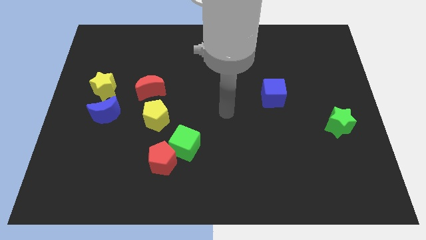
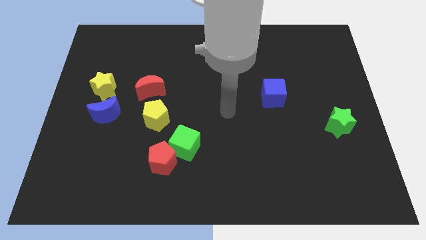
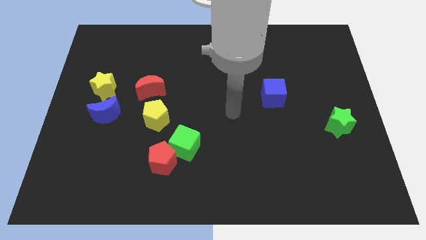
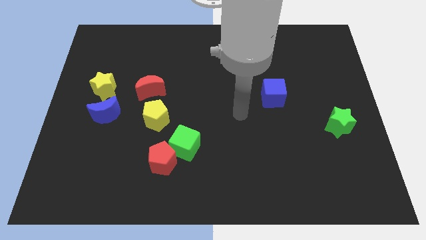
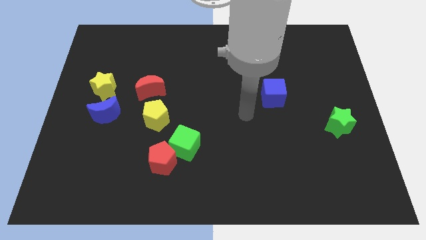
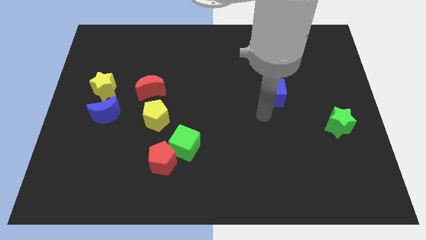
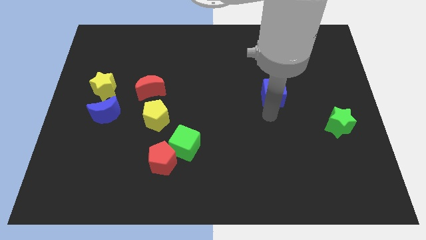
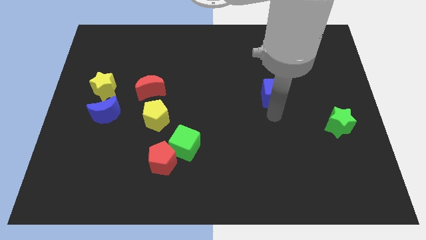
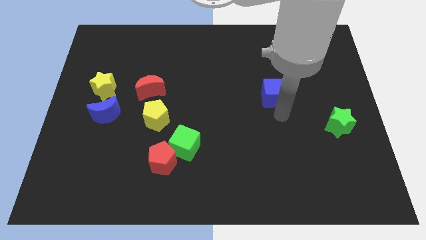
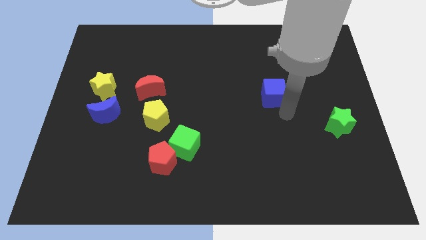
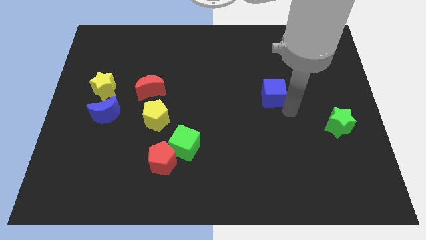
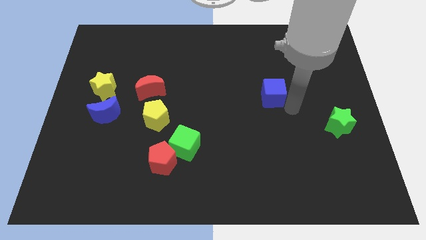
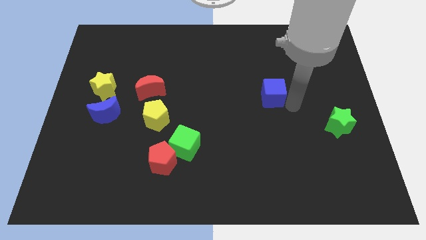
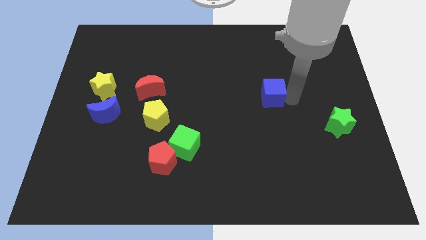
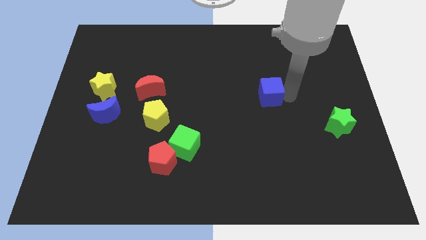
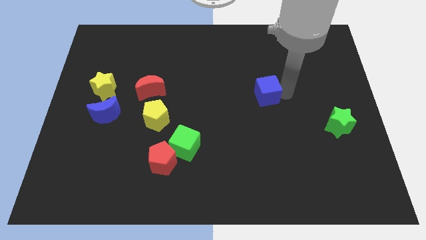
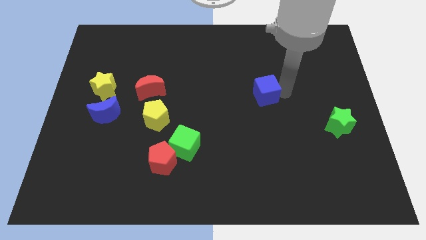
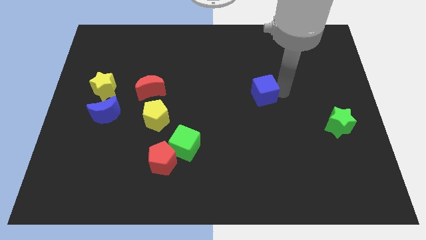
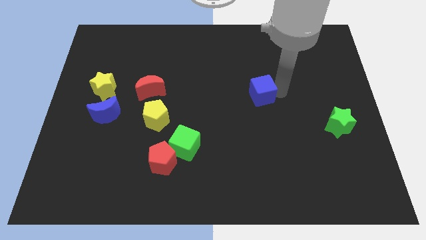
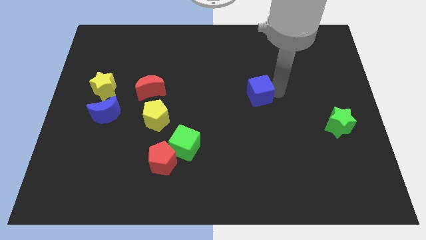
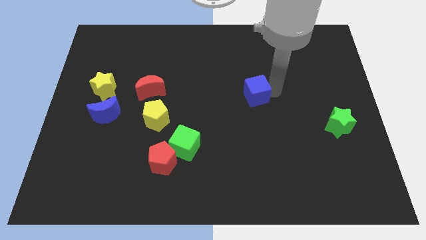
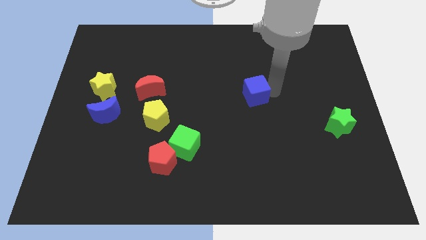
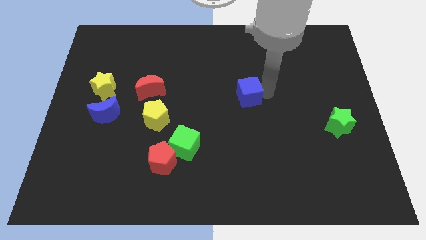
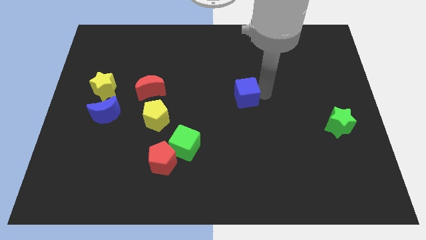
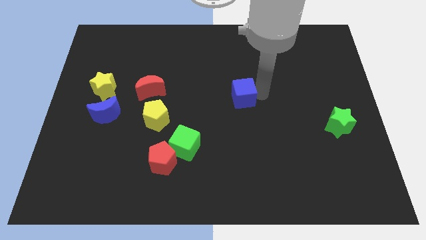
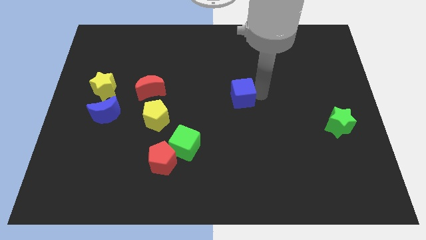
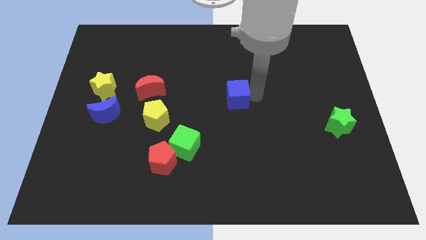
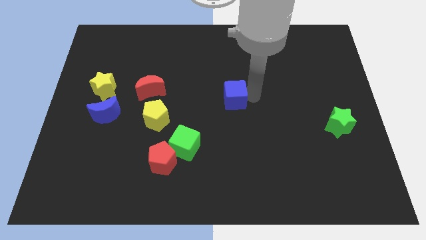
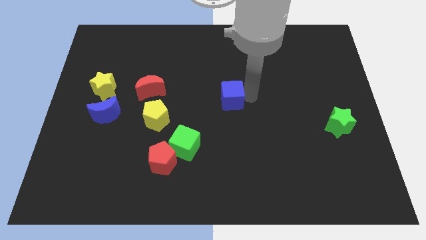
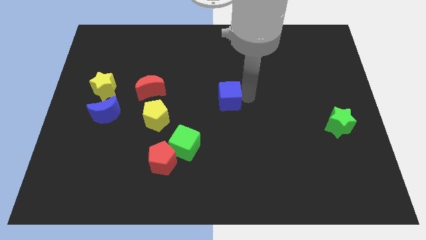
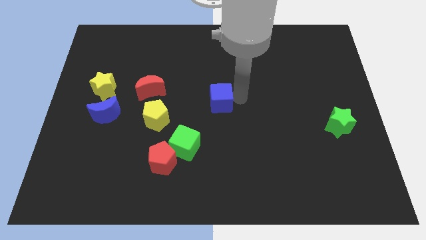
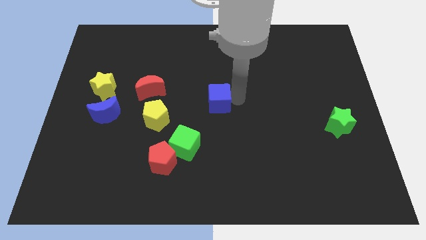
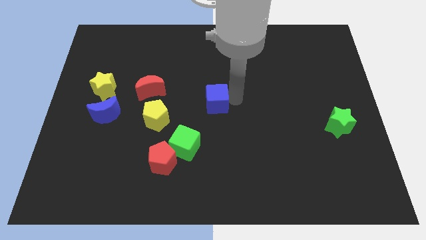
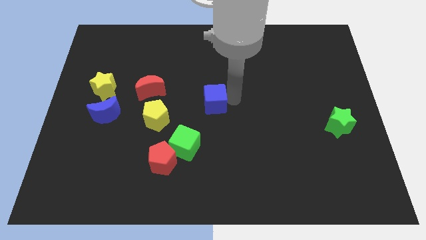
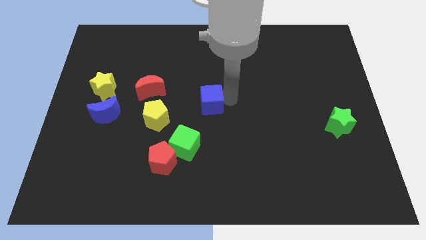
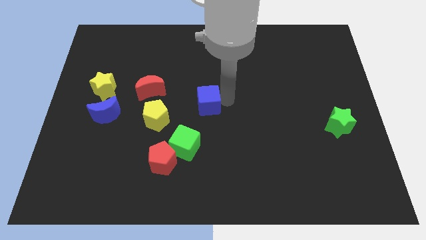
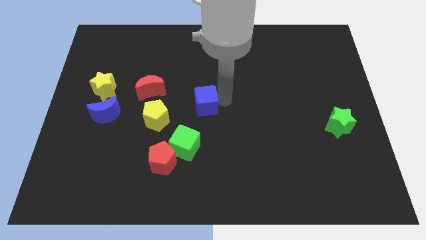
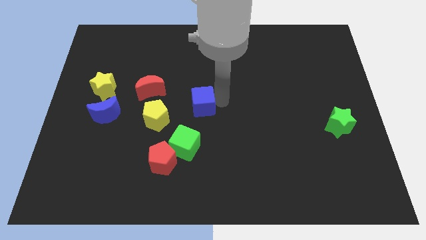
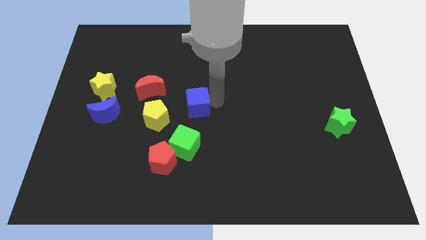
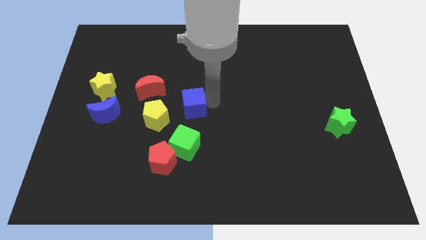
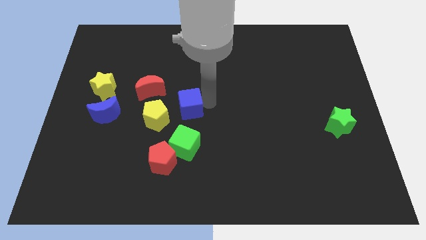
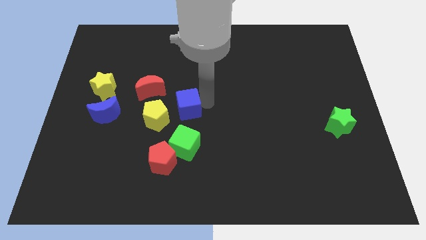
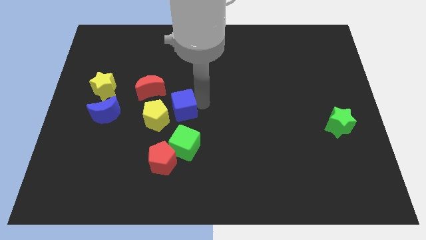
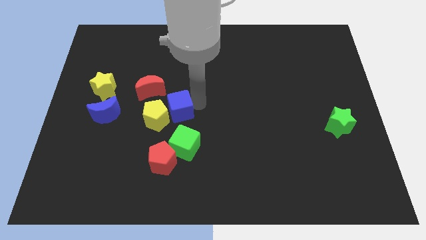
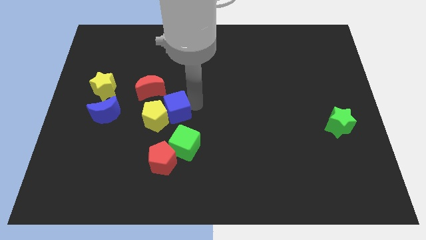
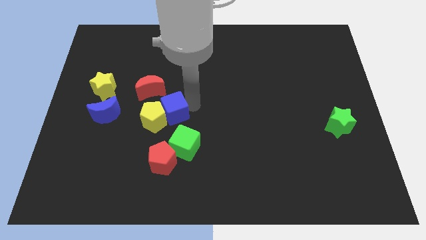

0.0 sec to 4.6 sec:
slide the blue cube next to the yellow pentagon

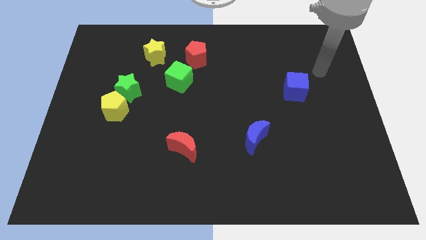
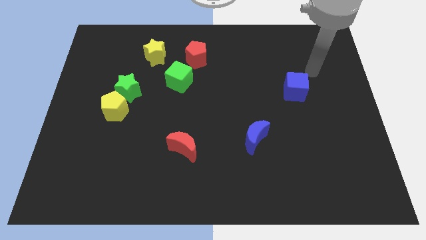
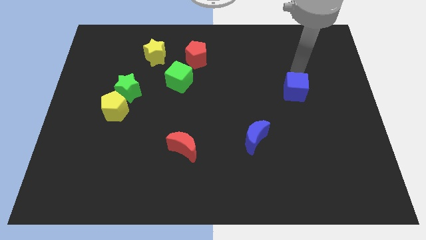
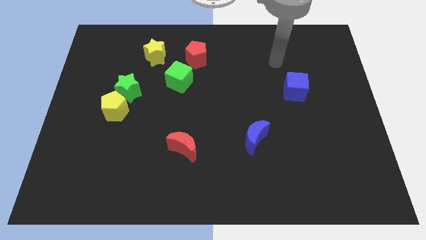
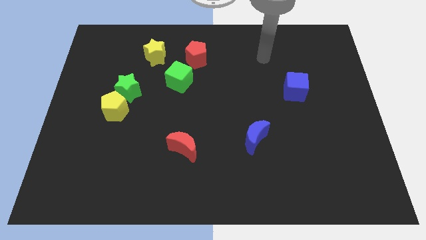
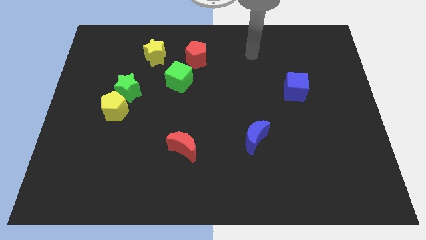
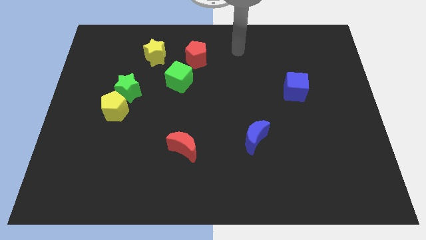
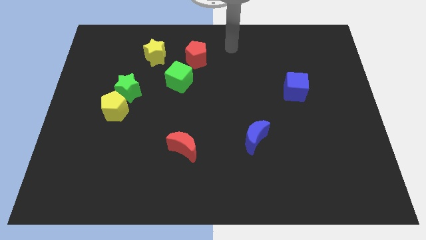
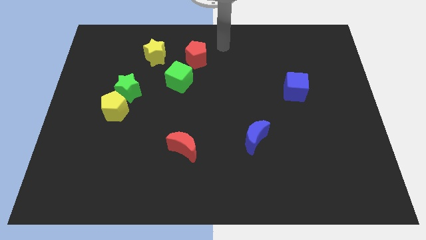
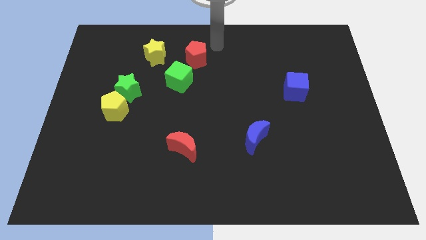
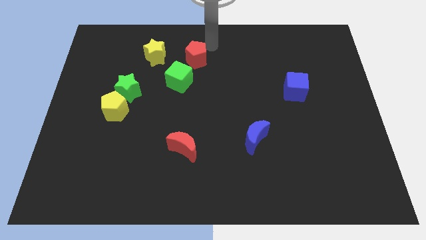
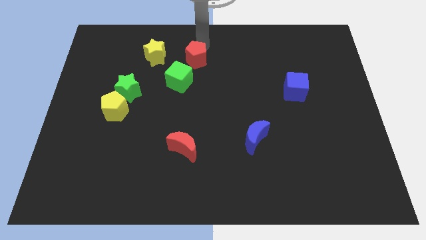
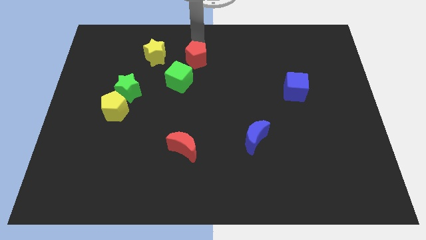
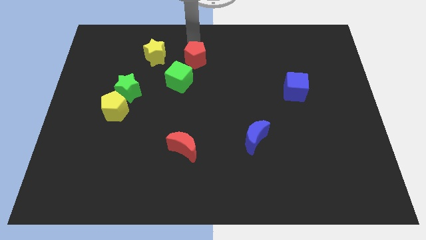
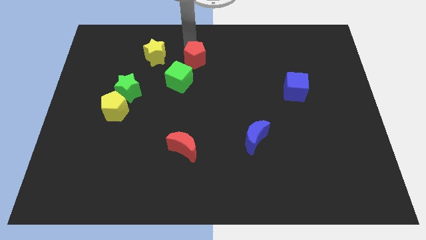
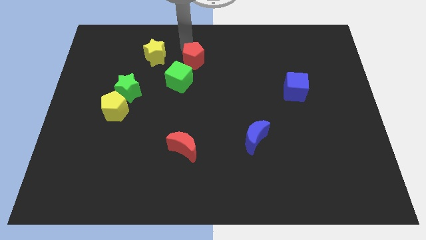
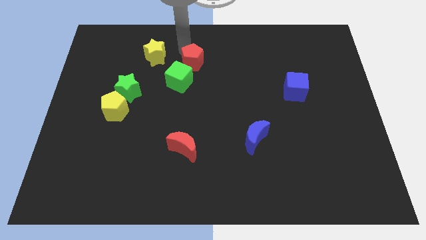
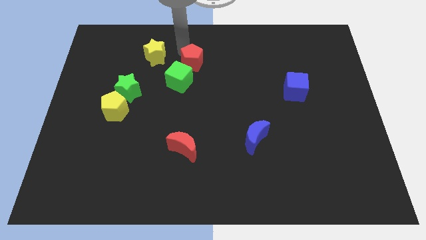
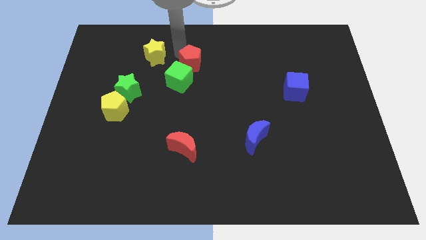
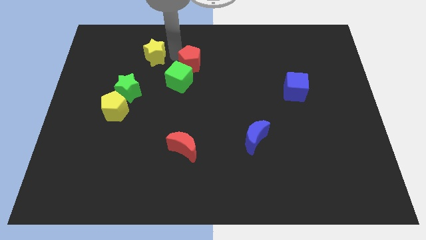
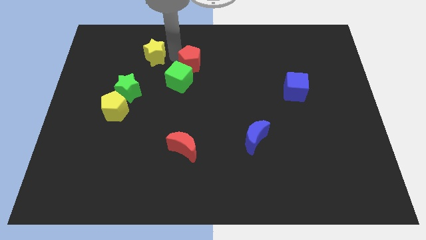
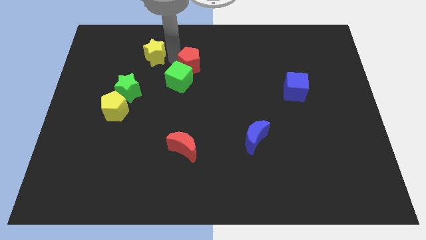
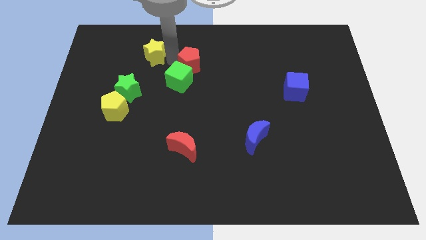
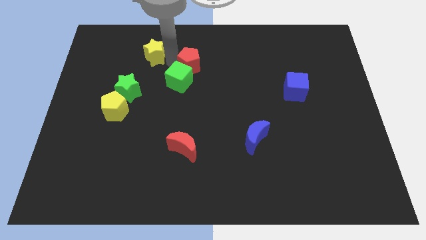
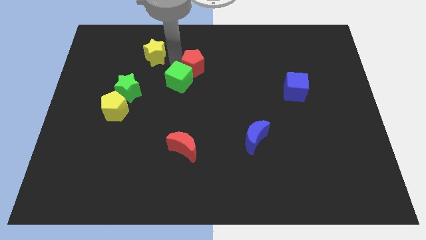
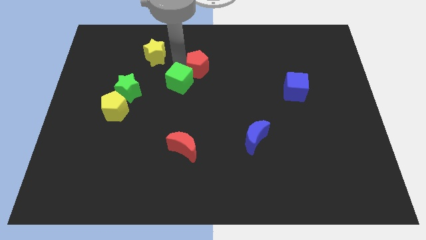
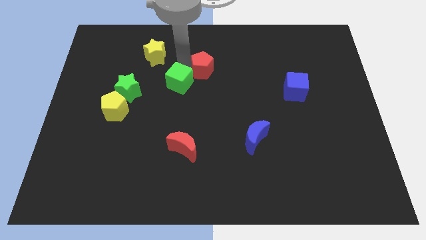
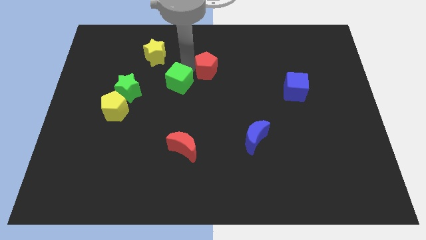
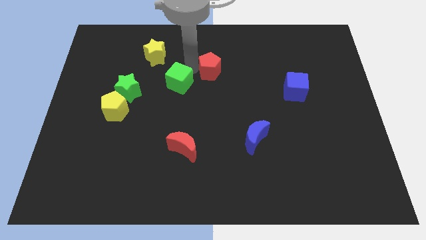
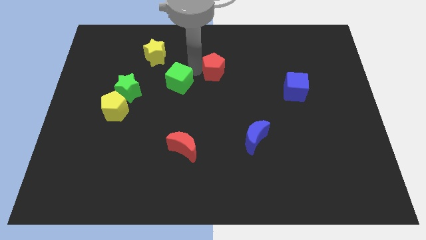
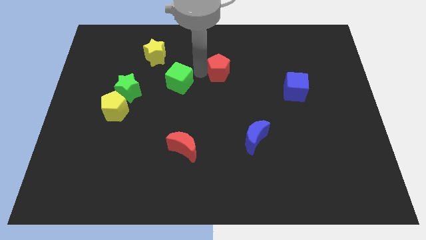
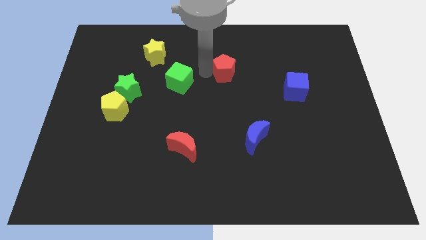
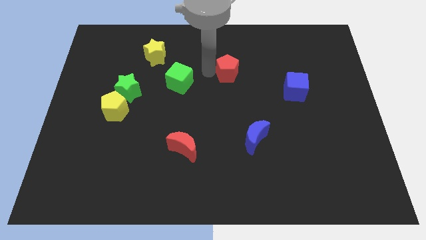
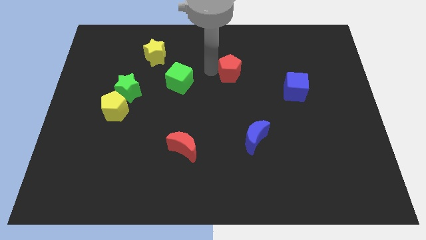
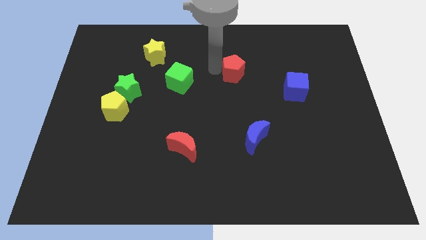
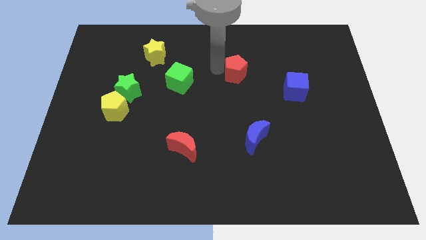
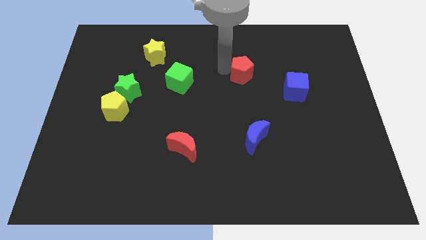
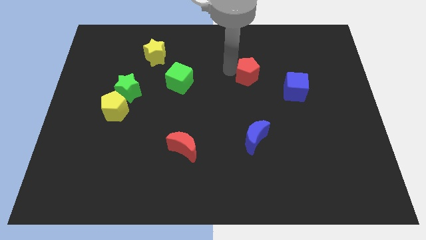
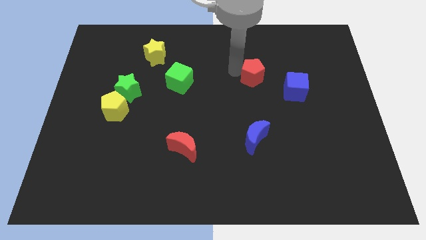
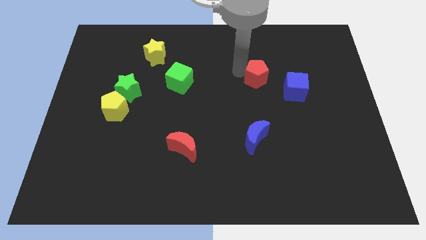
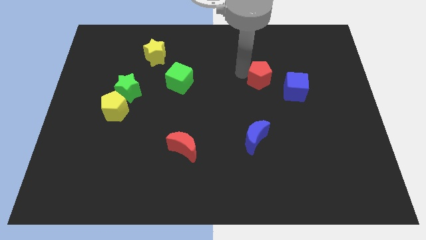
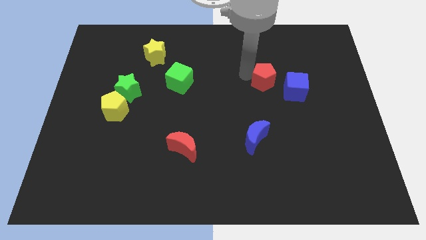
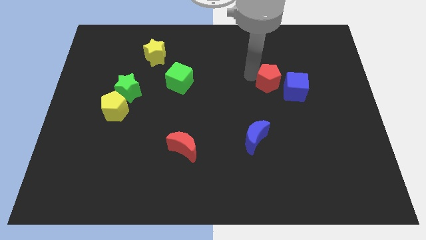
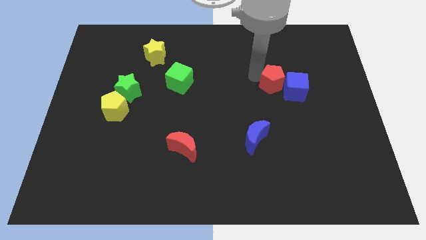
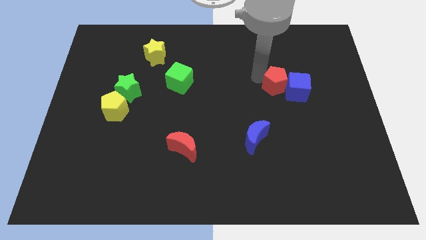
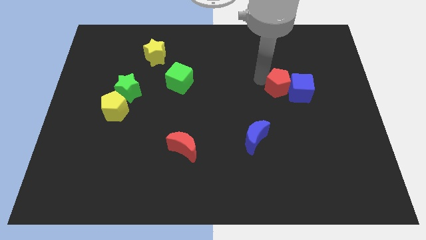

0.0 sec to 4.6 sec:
slide the red pentagon towards the blue cube
